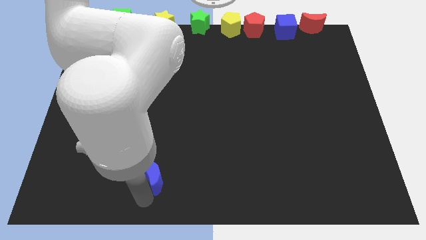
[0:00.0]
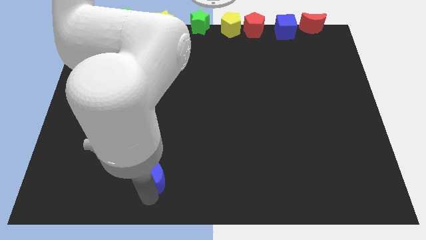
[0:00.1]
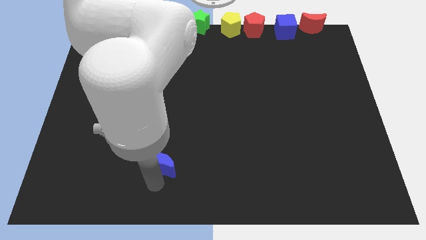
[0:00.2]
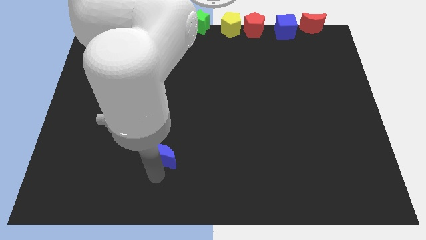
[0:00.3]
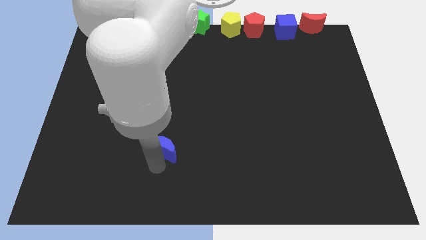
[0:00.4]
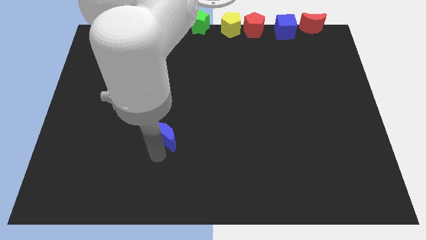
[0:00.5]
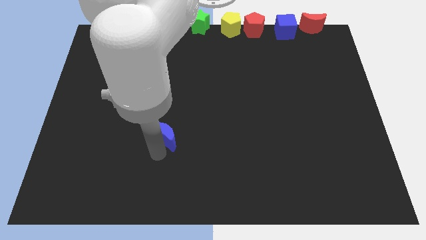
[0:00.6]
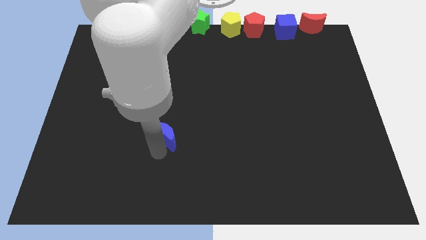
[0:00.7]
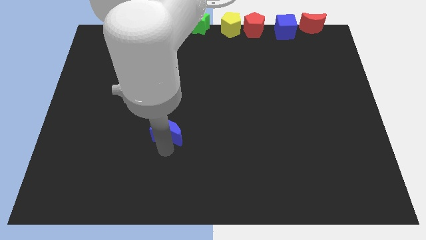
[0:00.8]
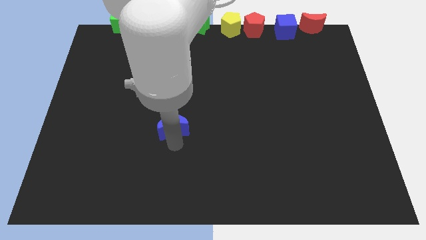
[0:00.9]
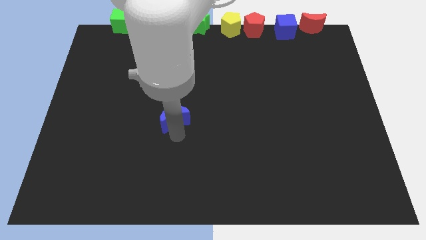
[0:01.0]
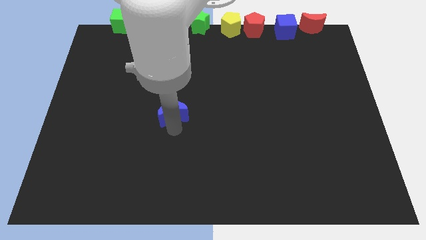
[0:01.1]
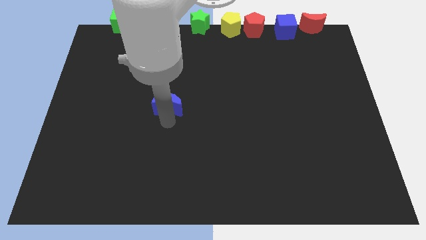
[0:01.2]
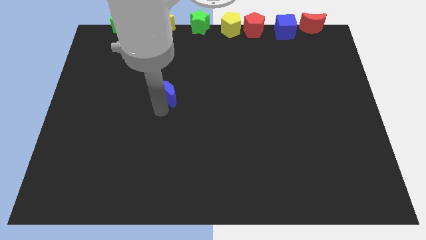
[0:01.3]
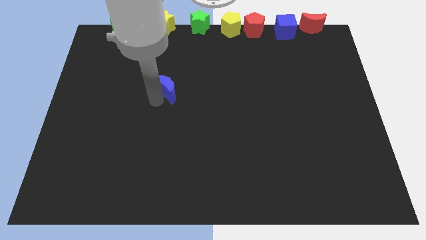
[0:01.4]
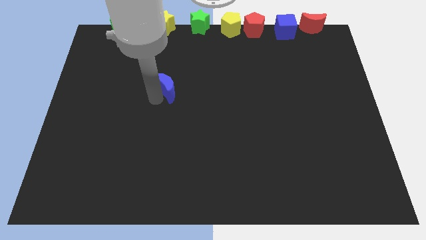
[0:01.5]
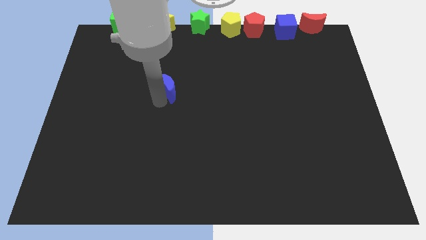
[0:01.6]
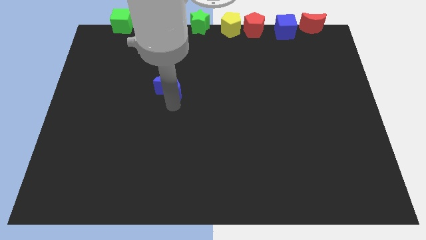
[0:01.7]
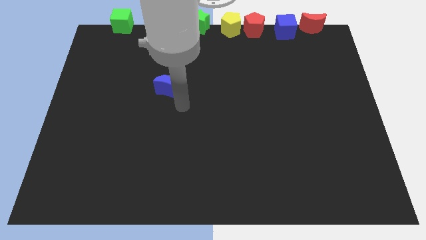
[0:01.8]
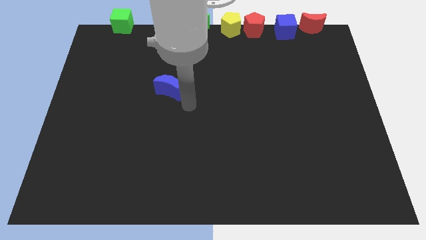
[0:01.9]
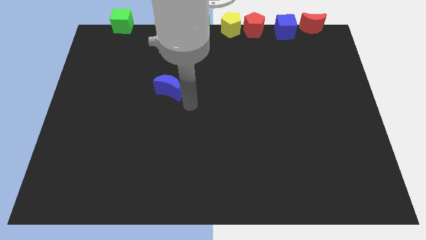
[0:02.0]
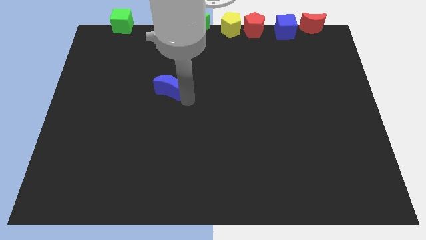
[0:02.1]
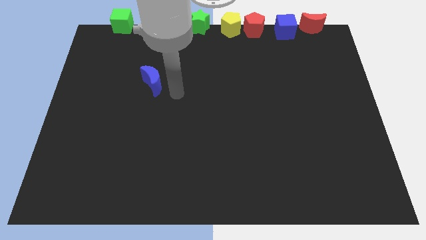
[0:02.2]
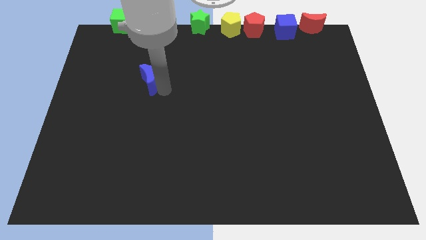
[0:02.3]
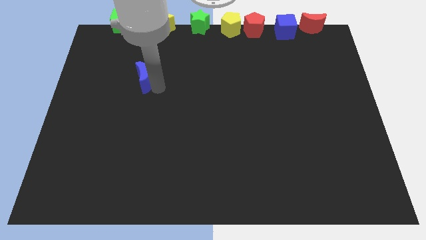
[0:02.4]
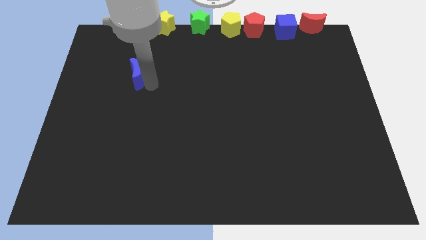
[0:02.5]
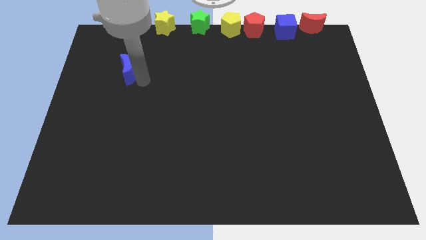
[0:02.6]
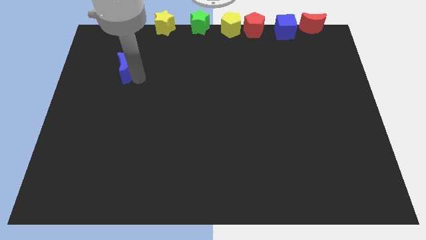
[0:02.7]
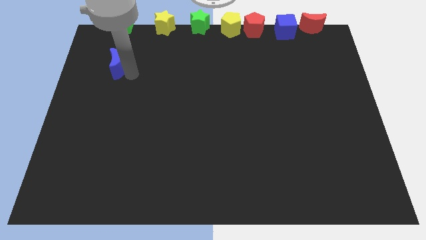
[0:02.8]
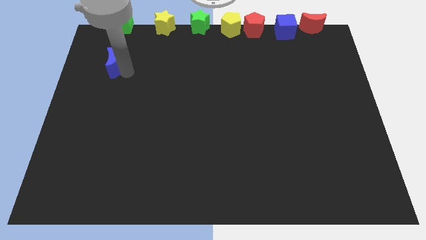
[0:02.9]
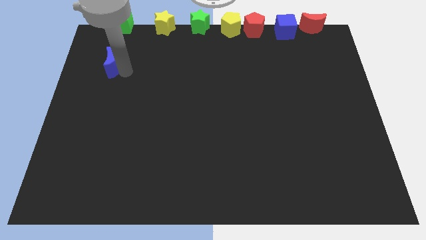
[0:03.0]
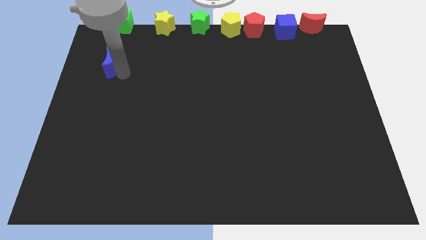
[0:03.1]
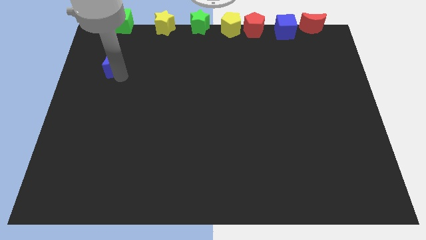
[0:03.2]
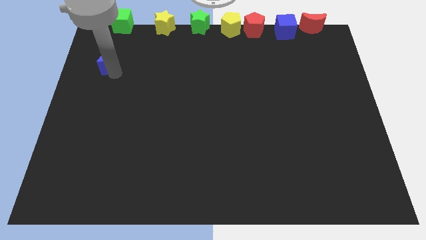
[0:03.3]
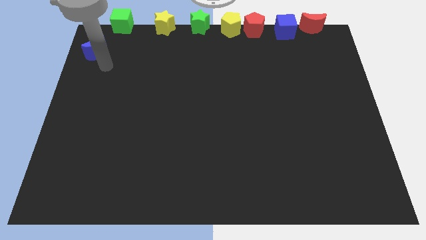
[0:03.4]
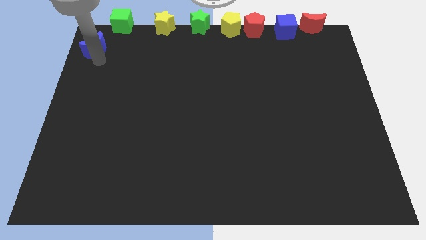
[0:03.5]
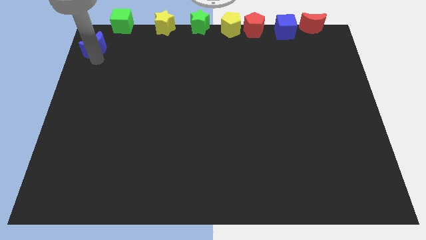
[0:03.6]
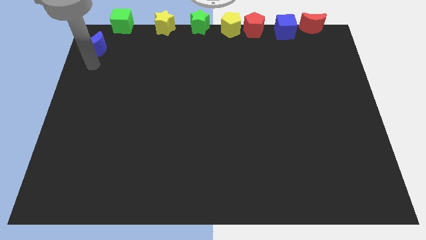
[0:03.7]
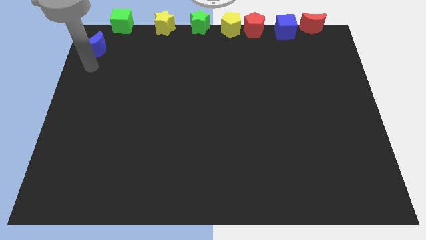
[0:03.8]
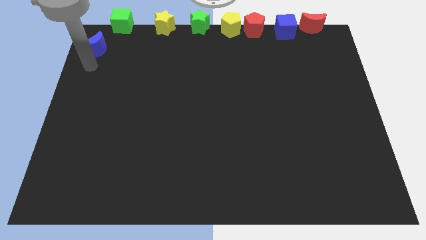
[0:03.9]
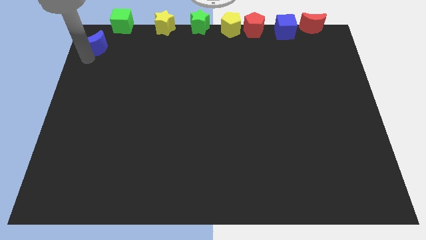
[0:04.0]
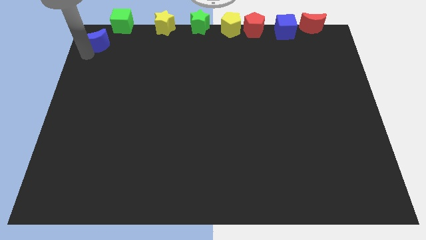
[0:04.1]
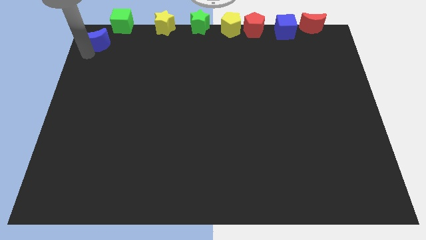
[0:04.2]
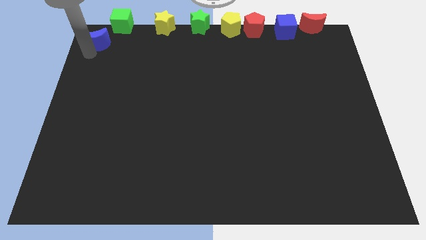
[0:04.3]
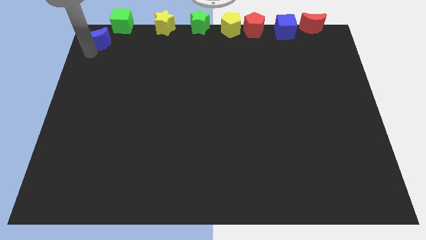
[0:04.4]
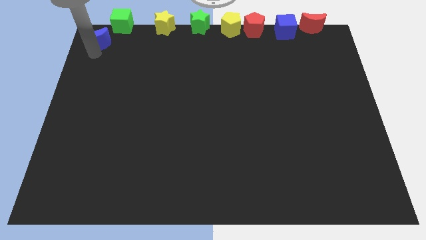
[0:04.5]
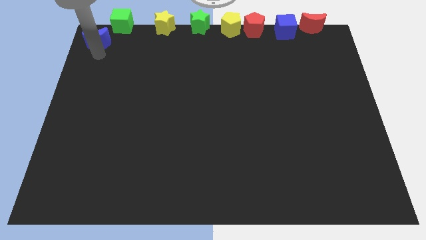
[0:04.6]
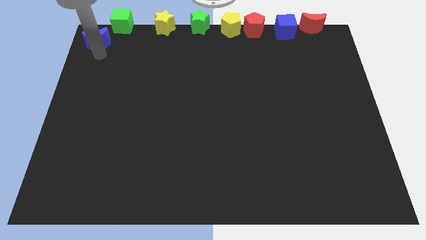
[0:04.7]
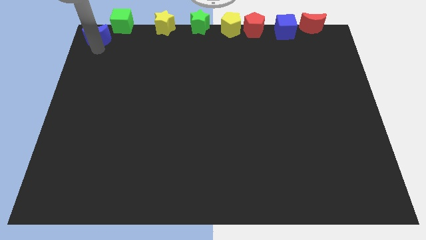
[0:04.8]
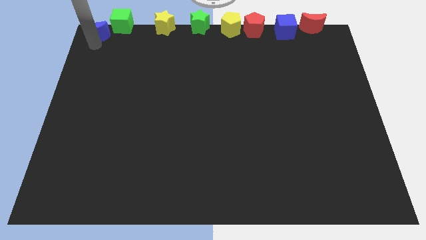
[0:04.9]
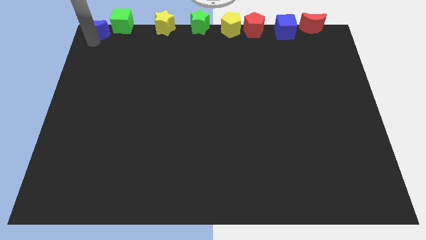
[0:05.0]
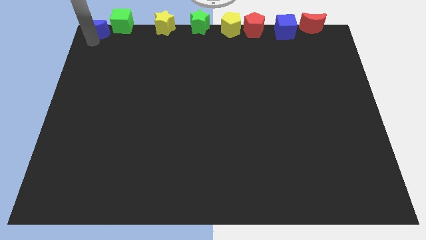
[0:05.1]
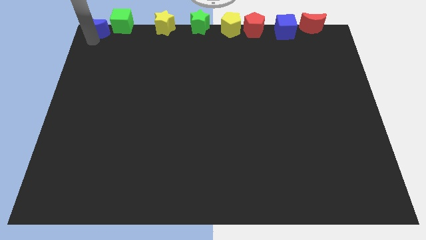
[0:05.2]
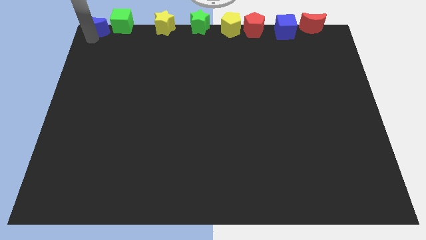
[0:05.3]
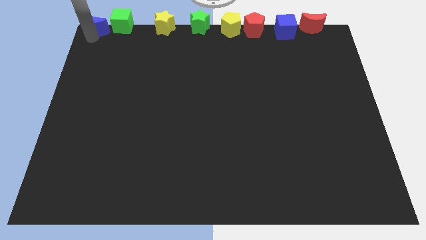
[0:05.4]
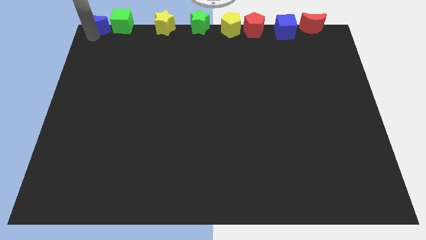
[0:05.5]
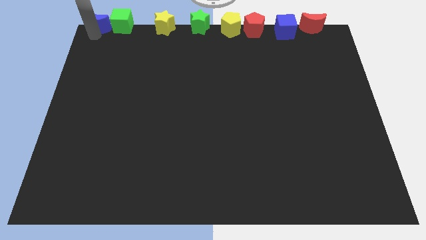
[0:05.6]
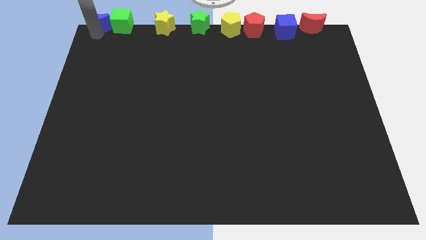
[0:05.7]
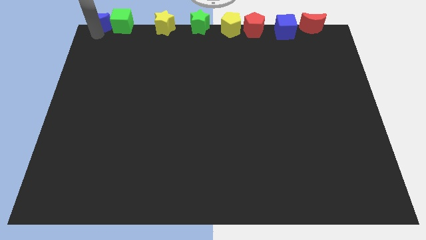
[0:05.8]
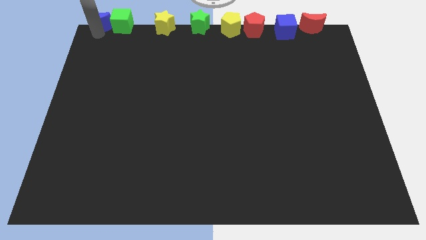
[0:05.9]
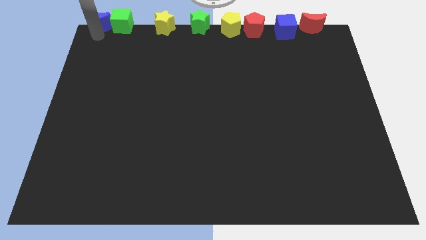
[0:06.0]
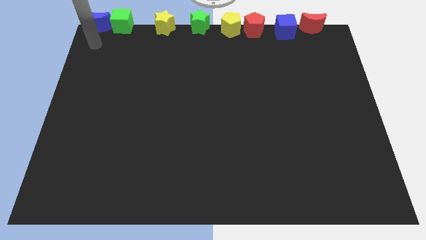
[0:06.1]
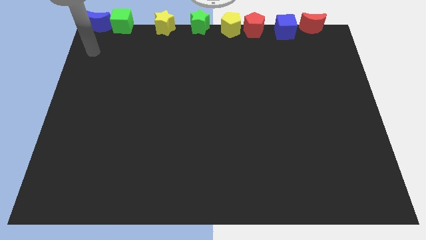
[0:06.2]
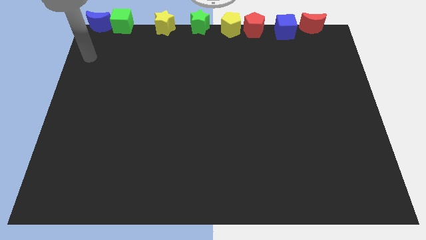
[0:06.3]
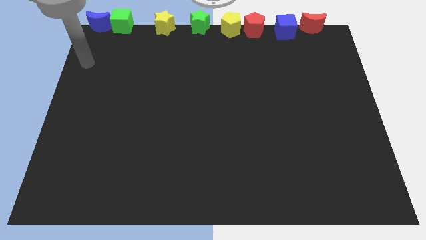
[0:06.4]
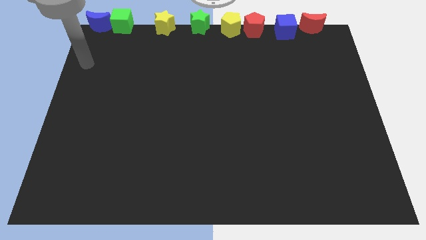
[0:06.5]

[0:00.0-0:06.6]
drag the blue crescent to the top left corner of the board

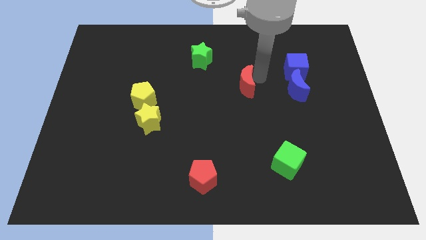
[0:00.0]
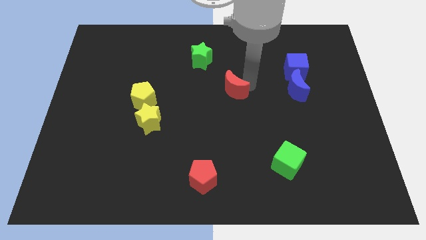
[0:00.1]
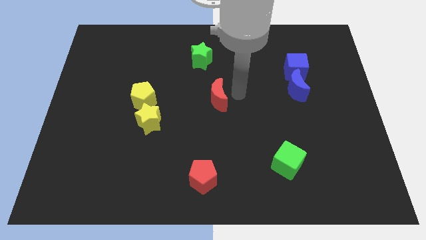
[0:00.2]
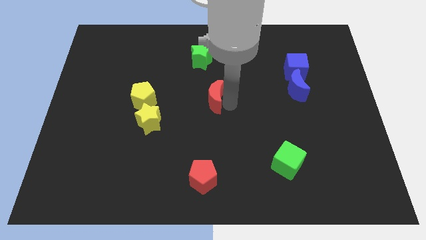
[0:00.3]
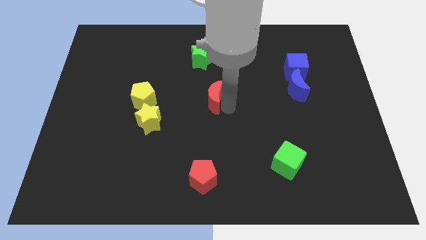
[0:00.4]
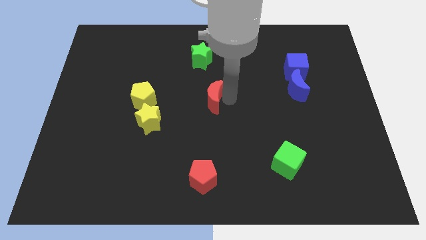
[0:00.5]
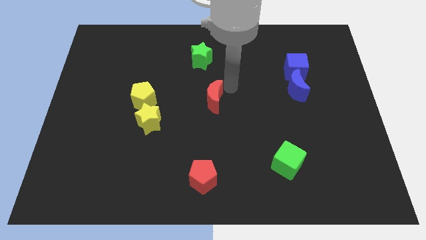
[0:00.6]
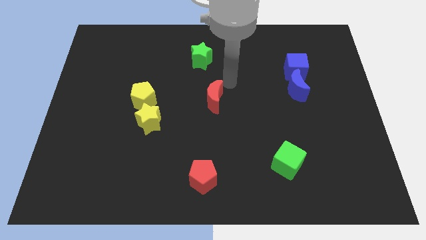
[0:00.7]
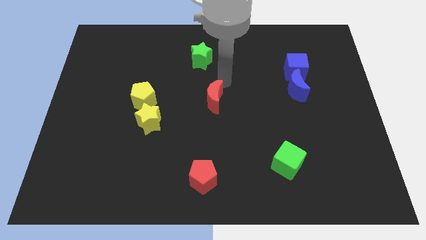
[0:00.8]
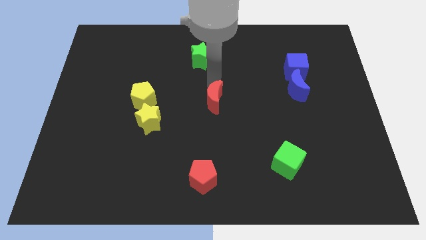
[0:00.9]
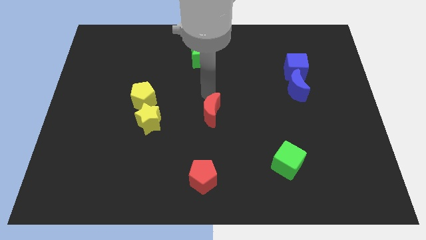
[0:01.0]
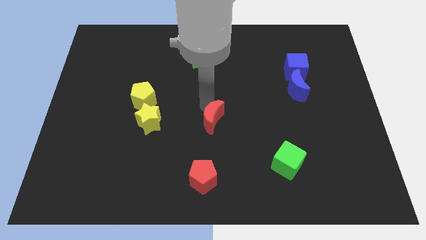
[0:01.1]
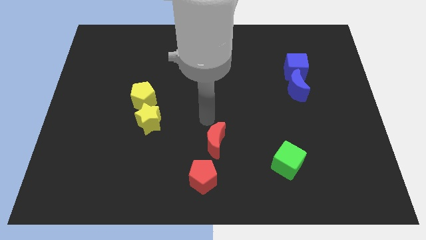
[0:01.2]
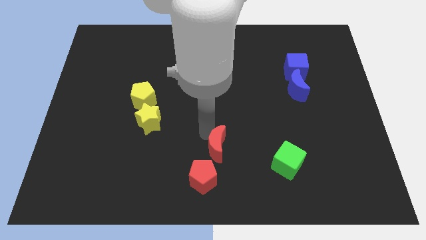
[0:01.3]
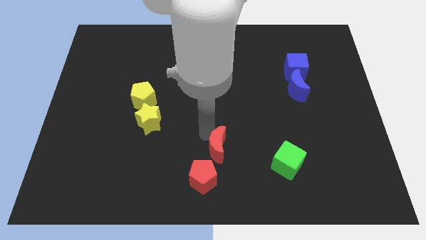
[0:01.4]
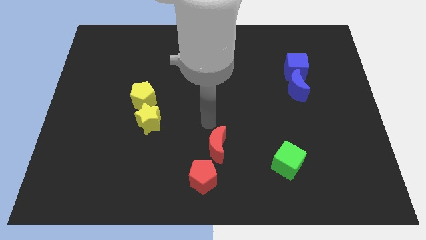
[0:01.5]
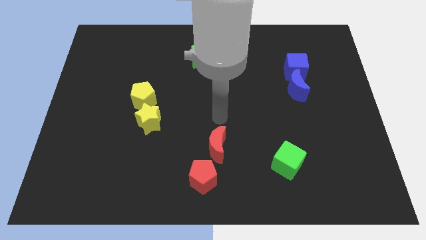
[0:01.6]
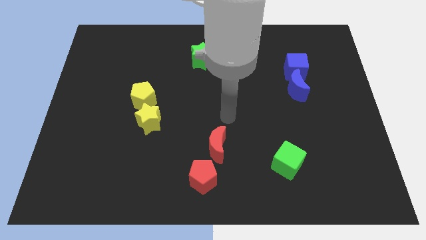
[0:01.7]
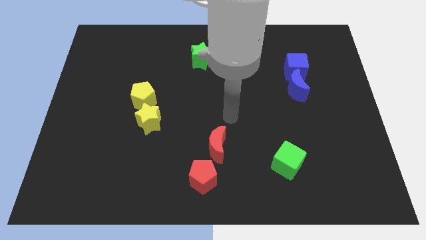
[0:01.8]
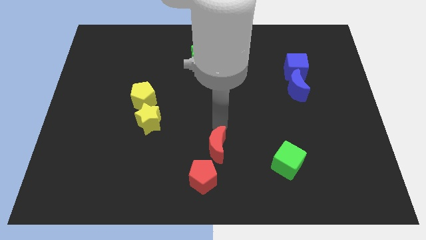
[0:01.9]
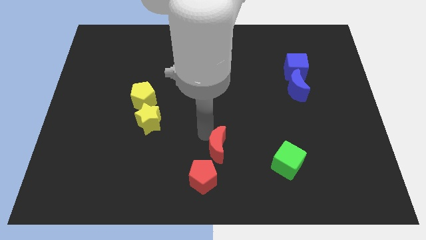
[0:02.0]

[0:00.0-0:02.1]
push red moon top right to the red pentagon

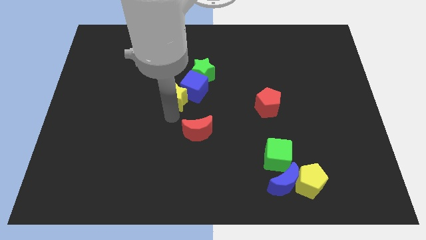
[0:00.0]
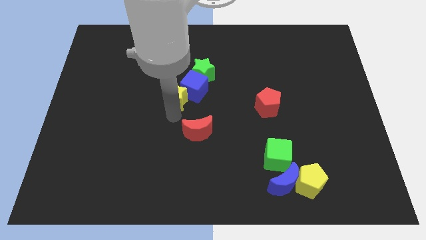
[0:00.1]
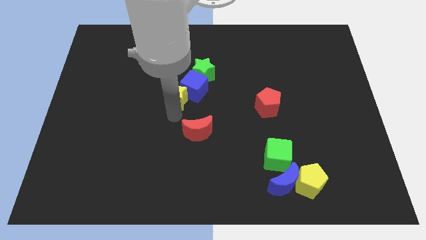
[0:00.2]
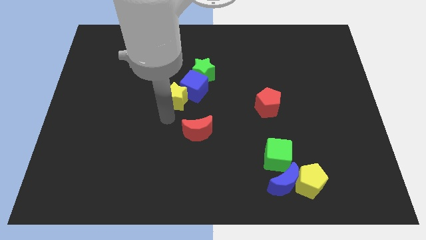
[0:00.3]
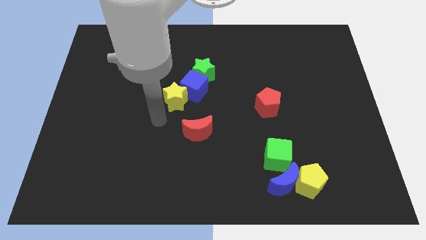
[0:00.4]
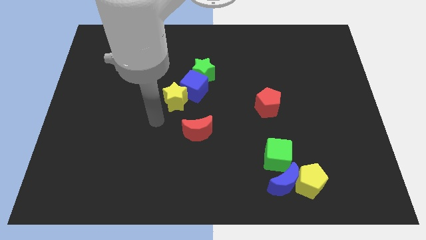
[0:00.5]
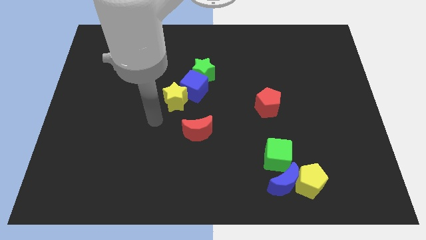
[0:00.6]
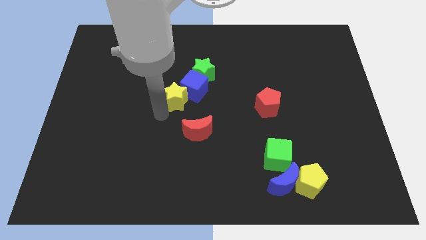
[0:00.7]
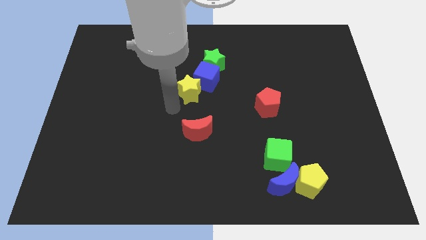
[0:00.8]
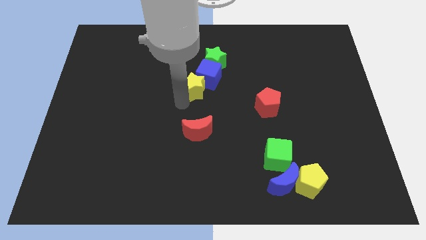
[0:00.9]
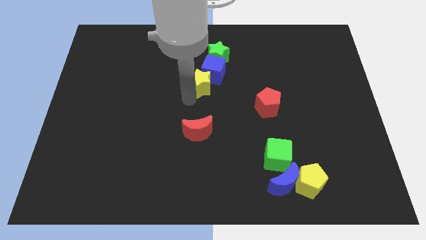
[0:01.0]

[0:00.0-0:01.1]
move the yellow star slightly up
